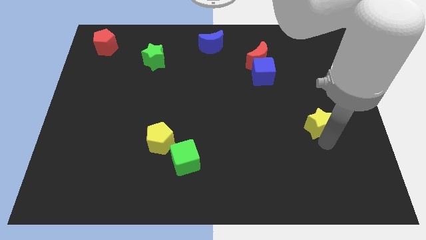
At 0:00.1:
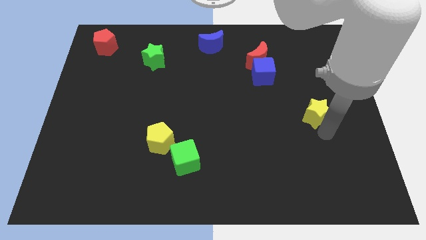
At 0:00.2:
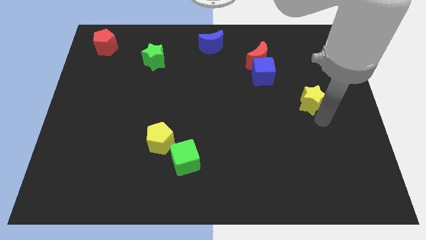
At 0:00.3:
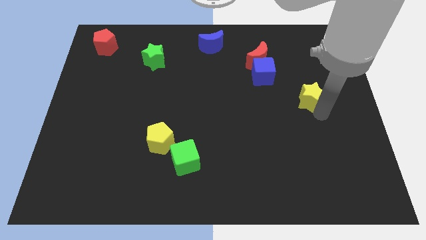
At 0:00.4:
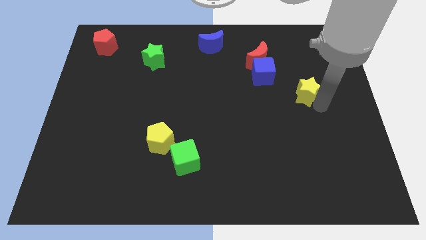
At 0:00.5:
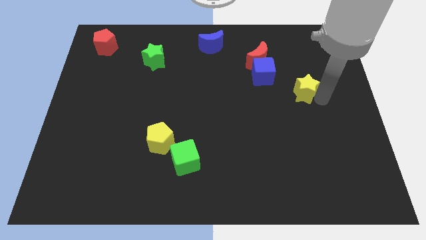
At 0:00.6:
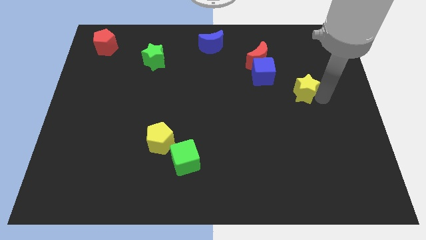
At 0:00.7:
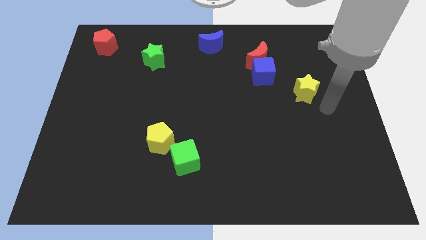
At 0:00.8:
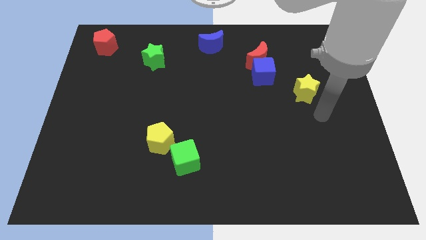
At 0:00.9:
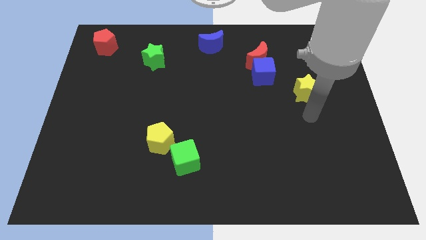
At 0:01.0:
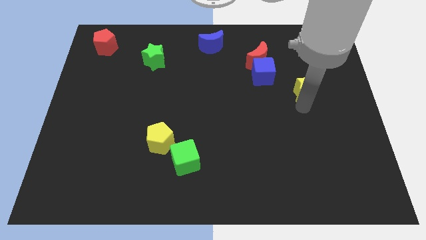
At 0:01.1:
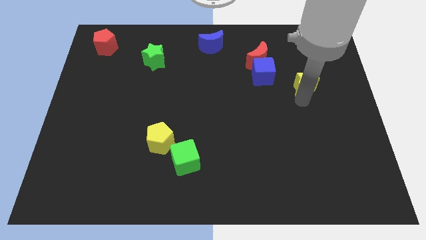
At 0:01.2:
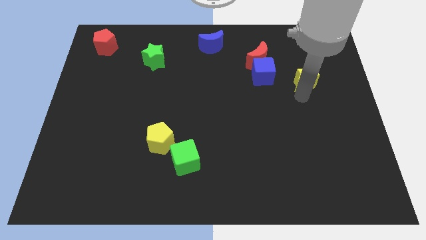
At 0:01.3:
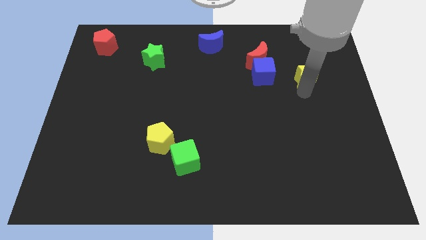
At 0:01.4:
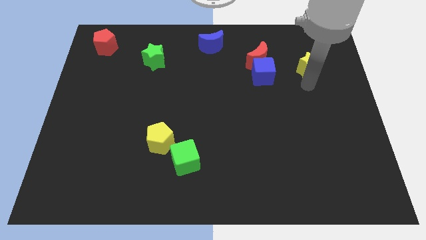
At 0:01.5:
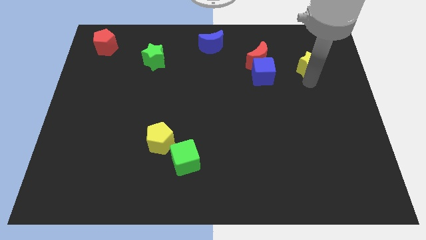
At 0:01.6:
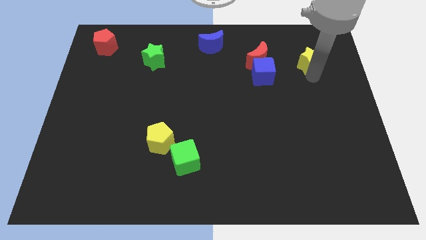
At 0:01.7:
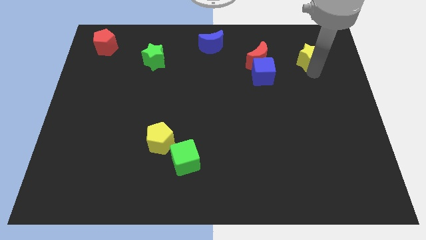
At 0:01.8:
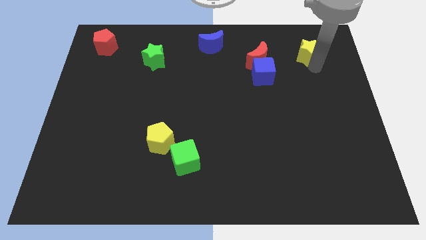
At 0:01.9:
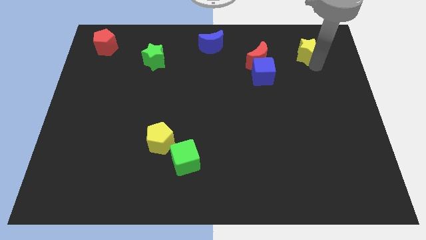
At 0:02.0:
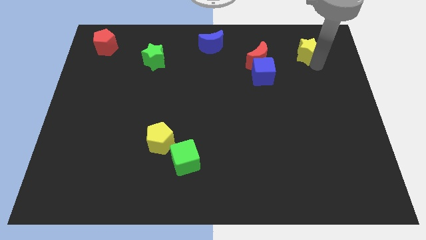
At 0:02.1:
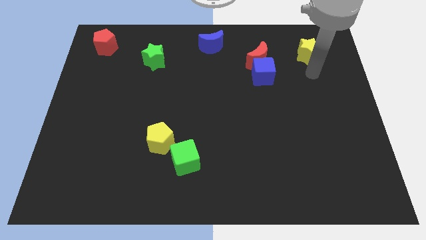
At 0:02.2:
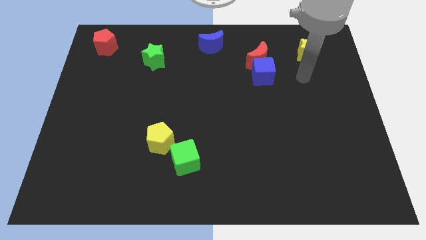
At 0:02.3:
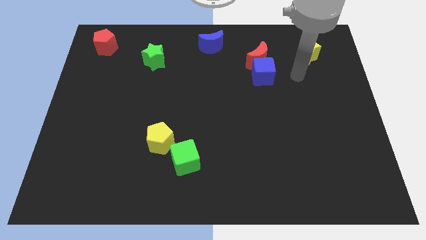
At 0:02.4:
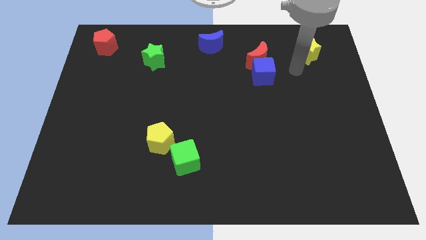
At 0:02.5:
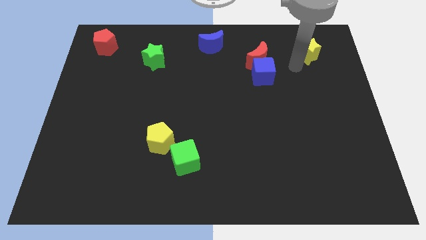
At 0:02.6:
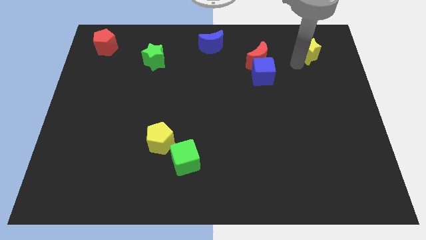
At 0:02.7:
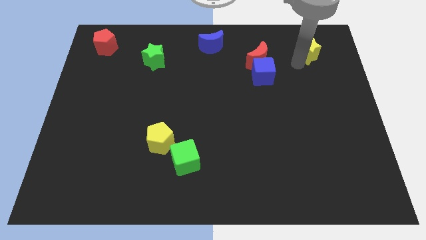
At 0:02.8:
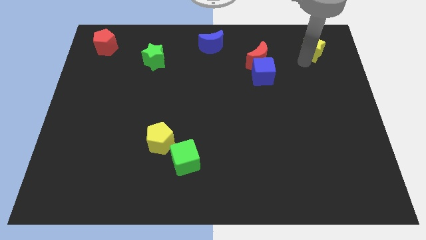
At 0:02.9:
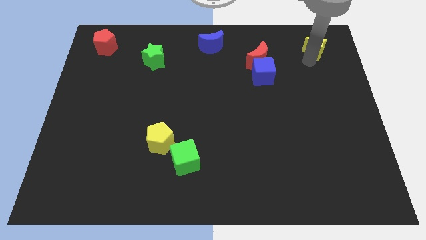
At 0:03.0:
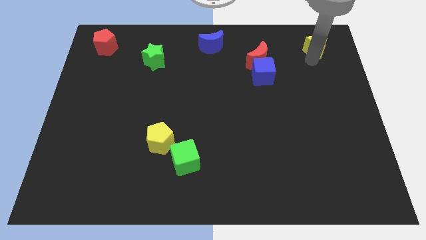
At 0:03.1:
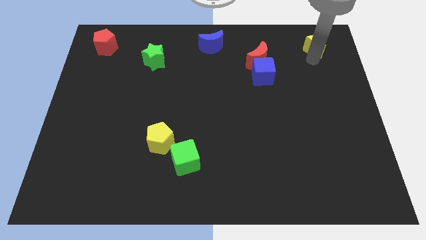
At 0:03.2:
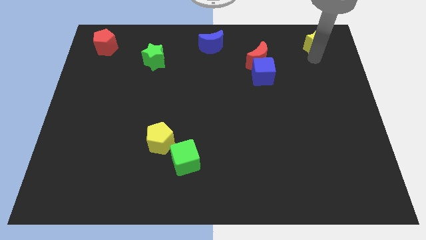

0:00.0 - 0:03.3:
push the yellow star to the right of the red crescent

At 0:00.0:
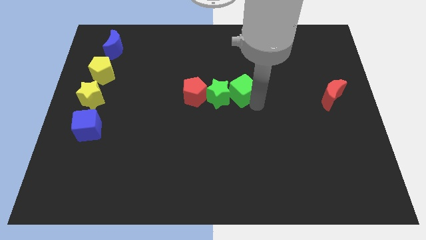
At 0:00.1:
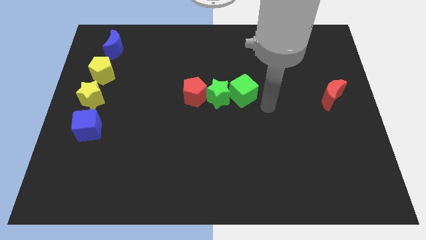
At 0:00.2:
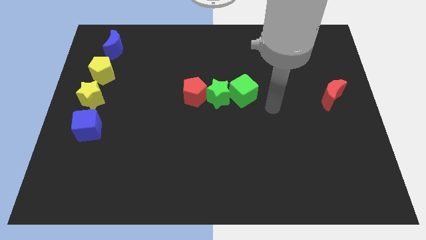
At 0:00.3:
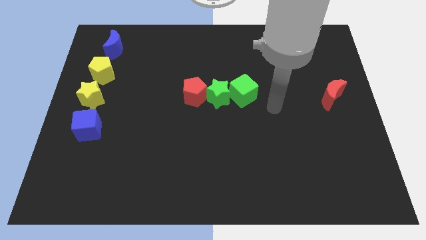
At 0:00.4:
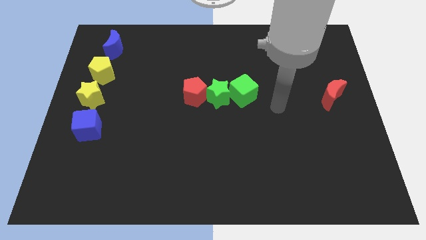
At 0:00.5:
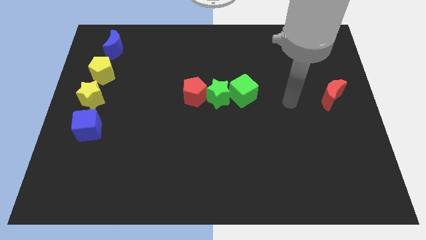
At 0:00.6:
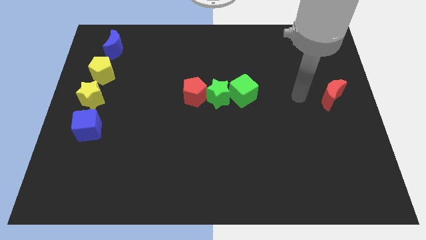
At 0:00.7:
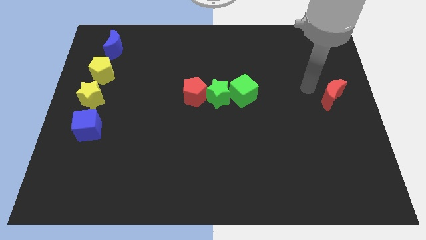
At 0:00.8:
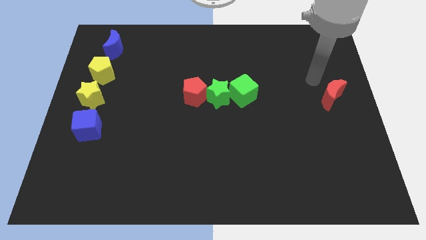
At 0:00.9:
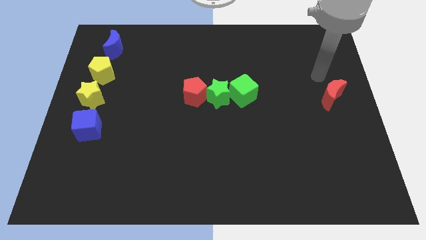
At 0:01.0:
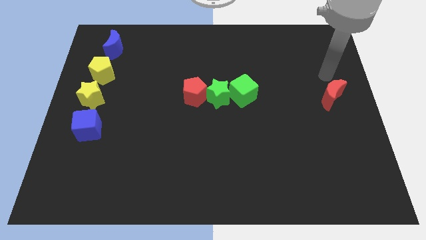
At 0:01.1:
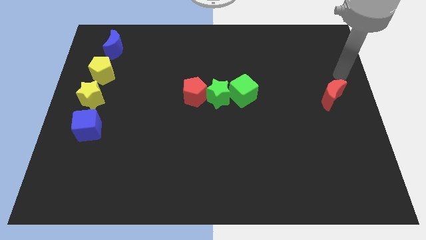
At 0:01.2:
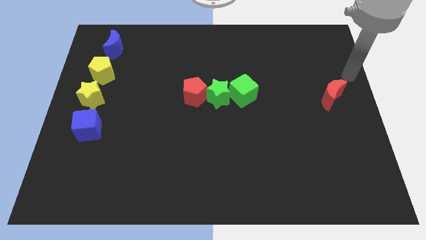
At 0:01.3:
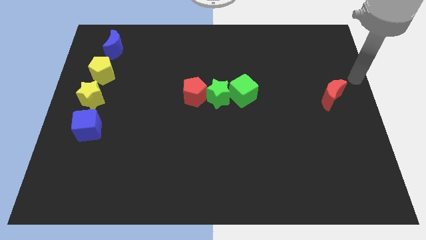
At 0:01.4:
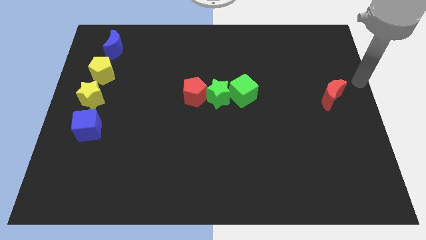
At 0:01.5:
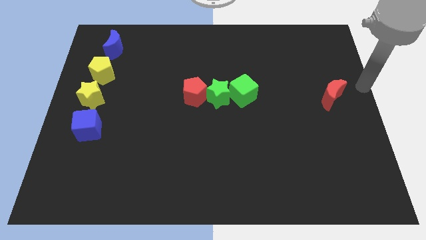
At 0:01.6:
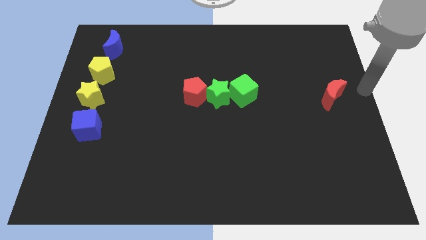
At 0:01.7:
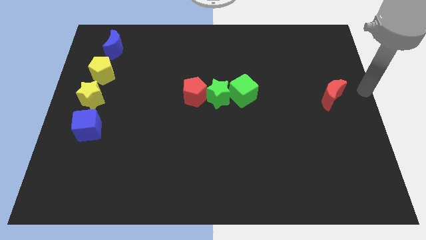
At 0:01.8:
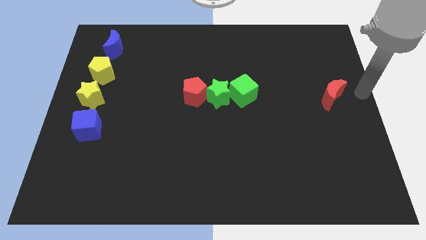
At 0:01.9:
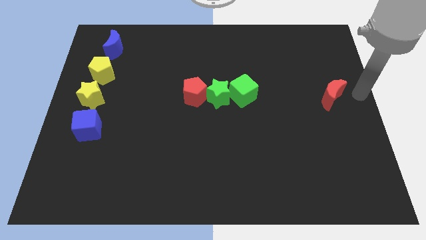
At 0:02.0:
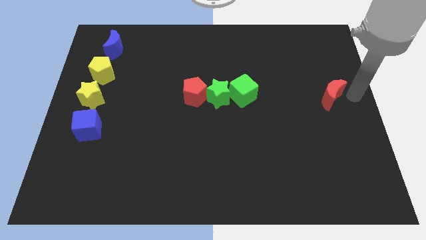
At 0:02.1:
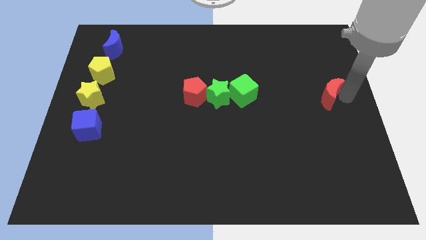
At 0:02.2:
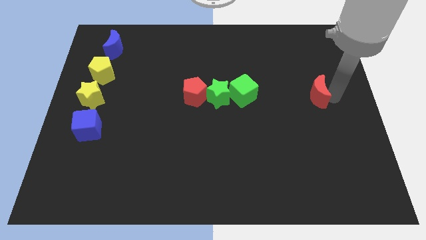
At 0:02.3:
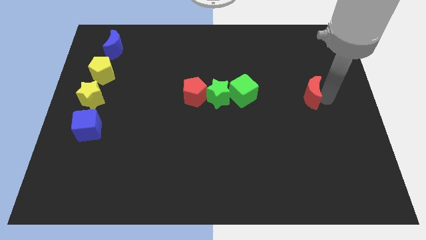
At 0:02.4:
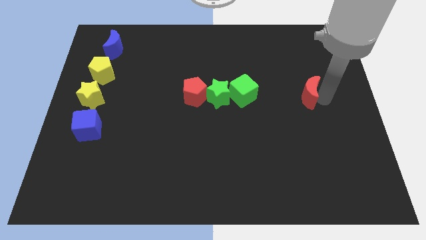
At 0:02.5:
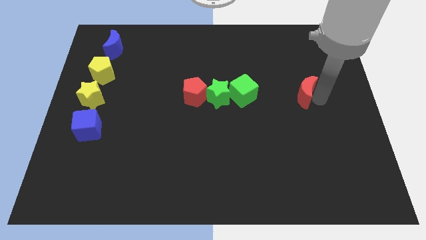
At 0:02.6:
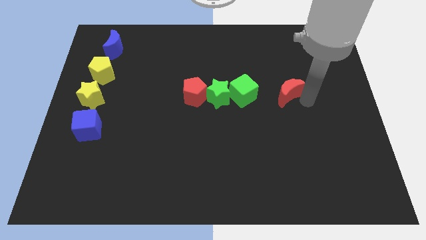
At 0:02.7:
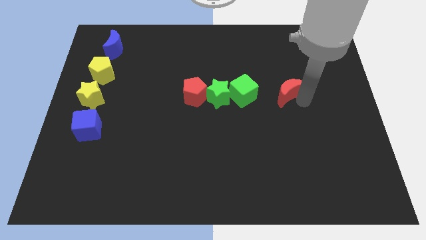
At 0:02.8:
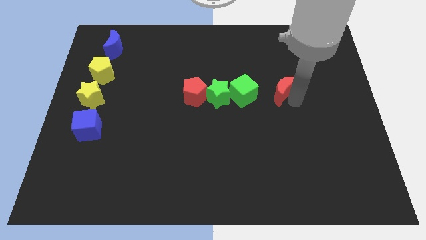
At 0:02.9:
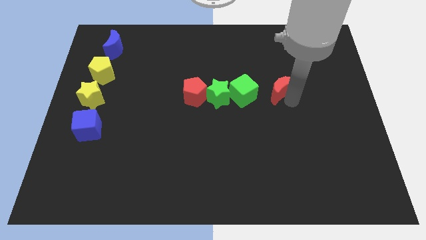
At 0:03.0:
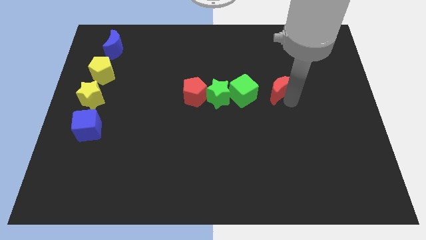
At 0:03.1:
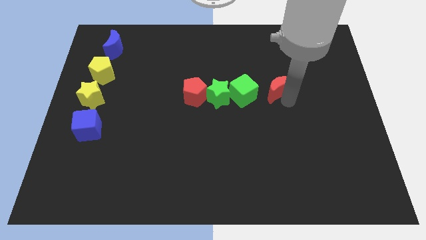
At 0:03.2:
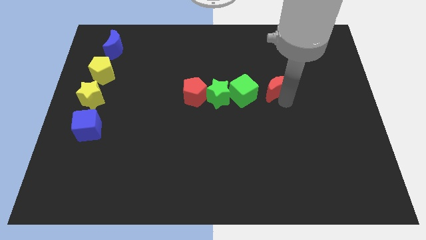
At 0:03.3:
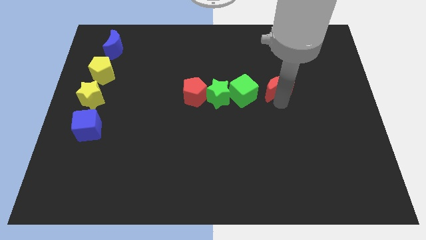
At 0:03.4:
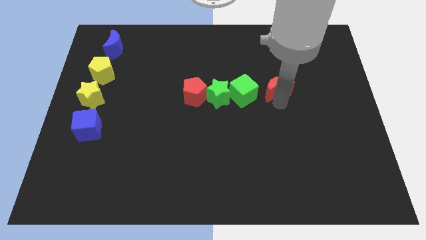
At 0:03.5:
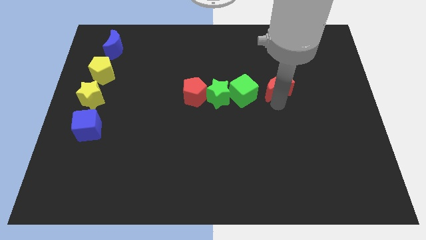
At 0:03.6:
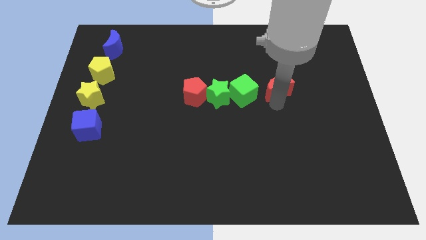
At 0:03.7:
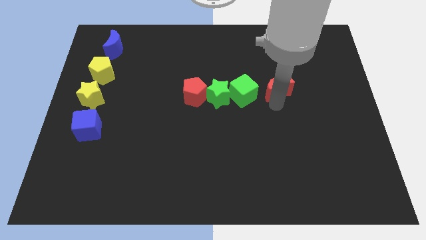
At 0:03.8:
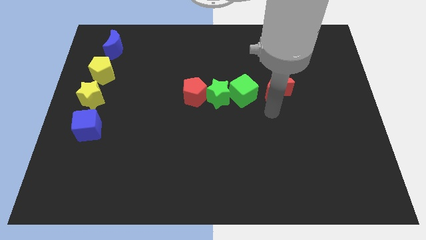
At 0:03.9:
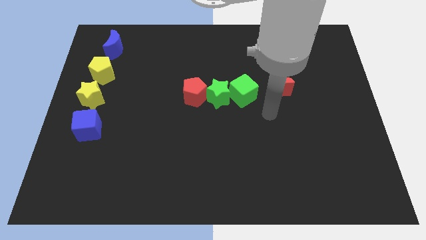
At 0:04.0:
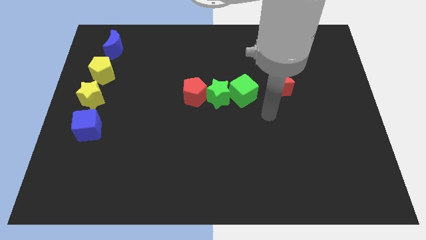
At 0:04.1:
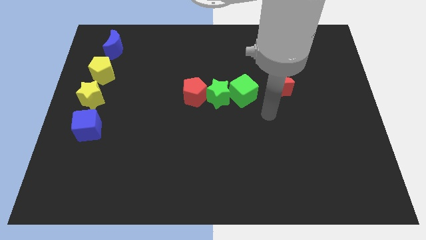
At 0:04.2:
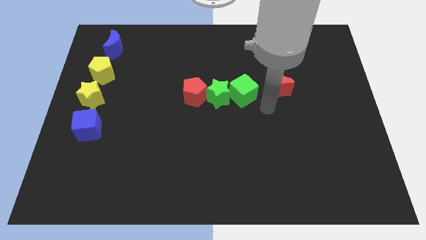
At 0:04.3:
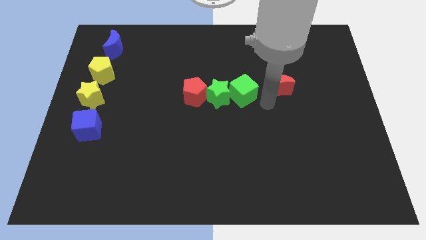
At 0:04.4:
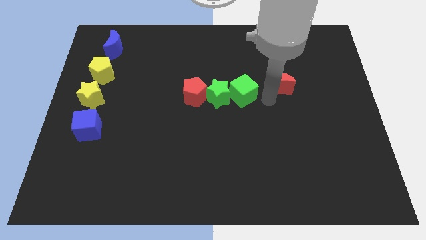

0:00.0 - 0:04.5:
move the red moon right to the green cube

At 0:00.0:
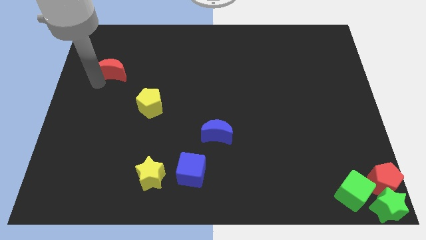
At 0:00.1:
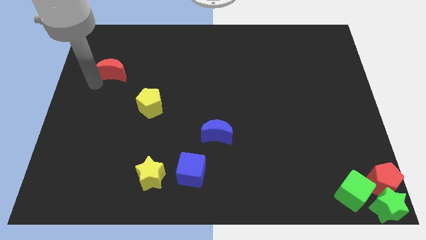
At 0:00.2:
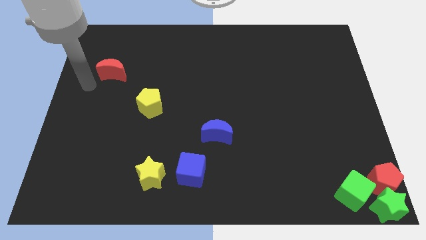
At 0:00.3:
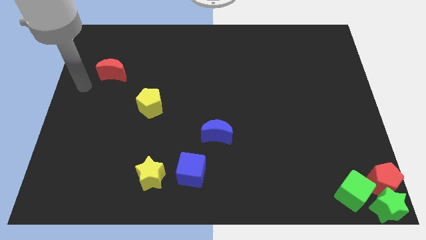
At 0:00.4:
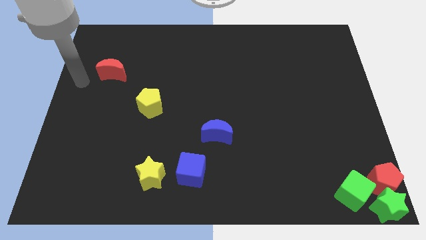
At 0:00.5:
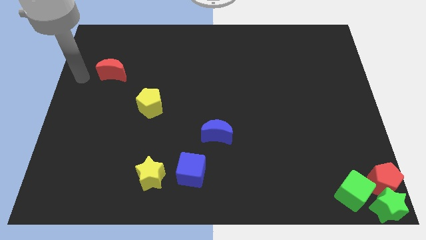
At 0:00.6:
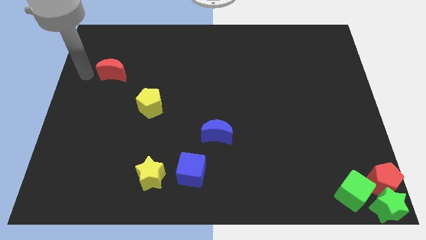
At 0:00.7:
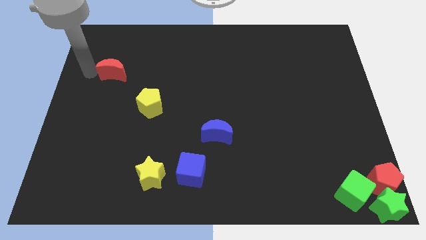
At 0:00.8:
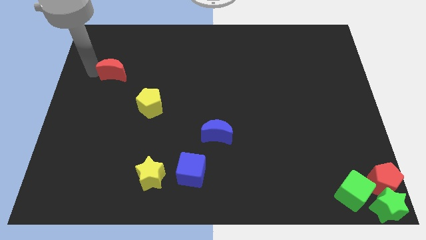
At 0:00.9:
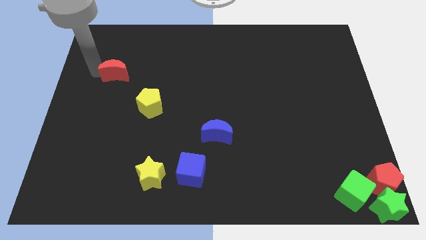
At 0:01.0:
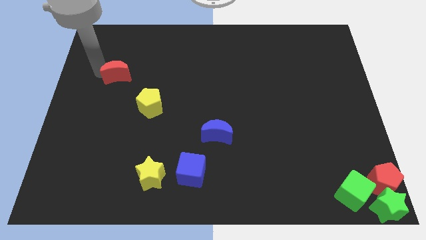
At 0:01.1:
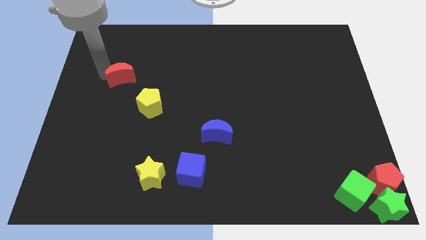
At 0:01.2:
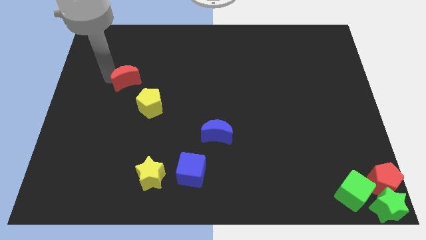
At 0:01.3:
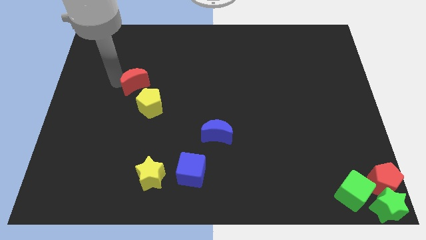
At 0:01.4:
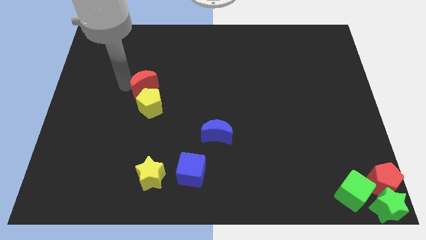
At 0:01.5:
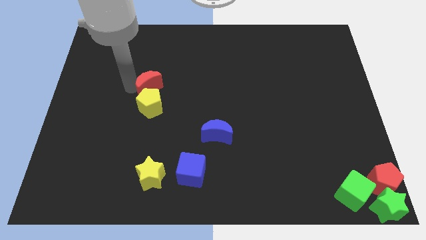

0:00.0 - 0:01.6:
move the red crescent above the yellow pentagon
